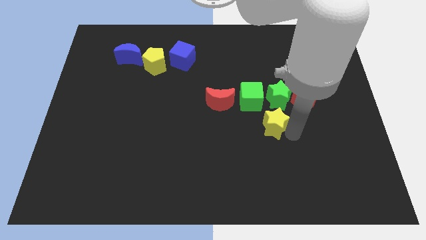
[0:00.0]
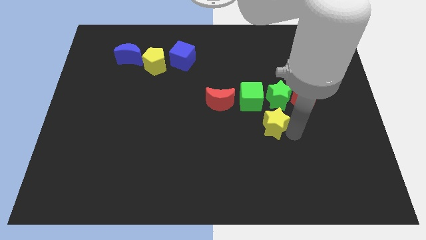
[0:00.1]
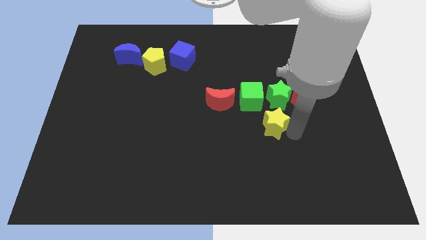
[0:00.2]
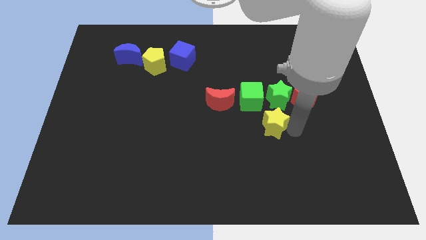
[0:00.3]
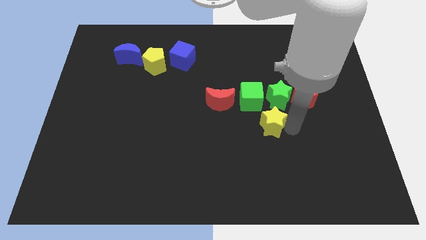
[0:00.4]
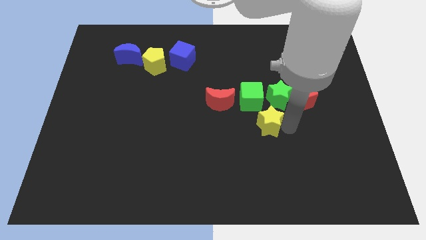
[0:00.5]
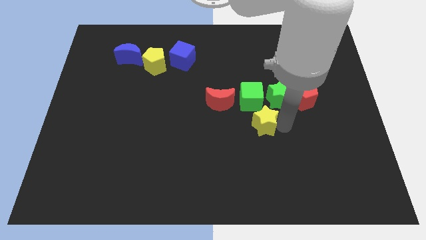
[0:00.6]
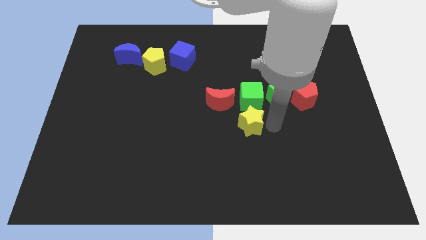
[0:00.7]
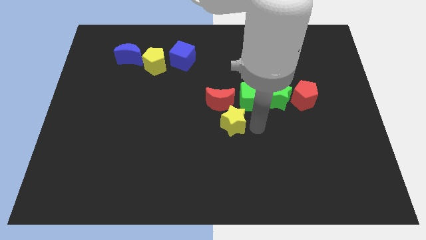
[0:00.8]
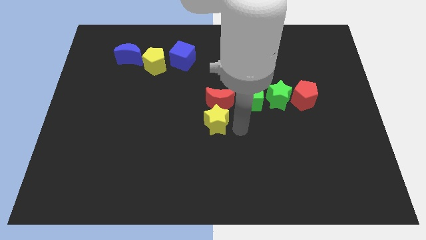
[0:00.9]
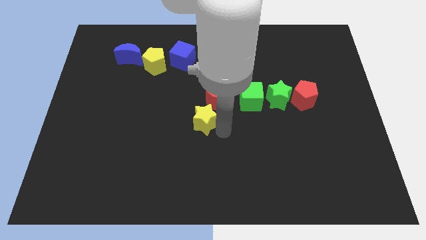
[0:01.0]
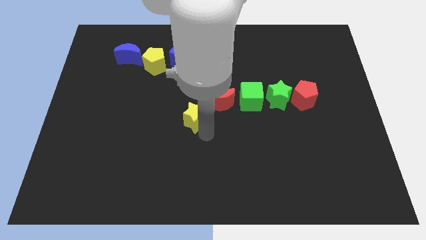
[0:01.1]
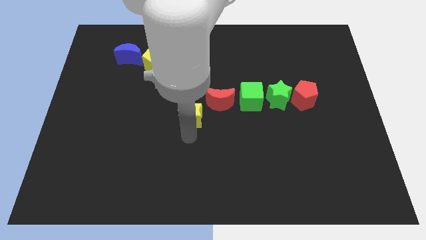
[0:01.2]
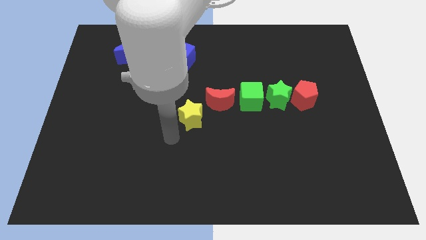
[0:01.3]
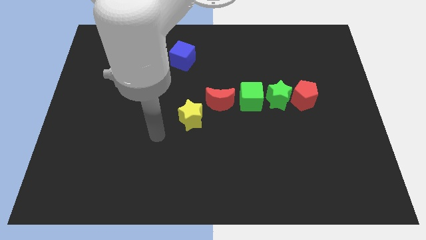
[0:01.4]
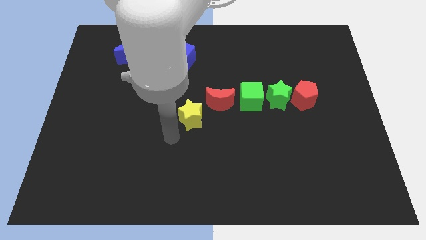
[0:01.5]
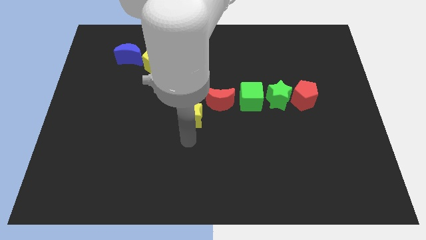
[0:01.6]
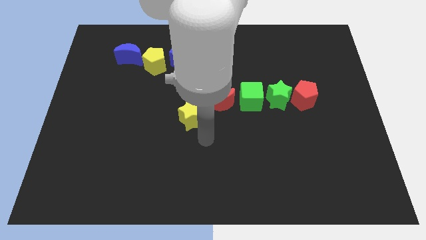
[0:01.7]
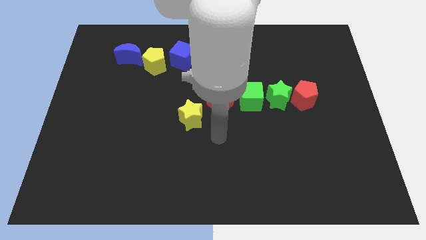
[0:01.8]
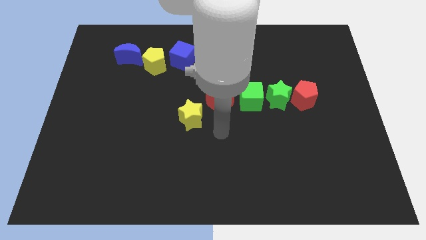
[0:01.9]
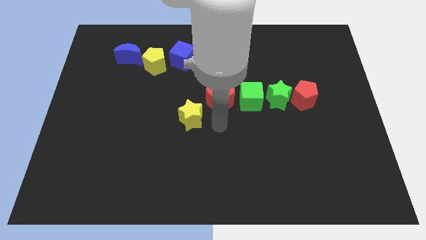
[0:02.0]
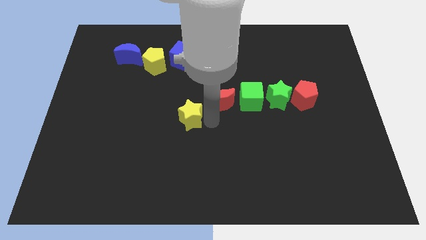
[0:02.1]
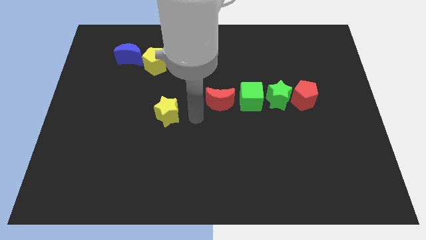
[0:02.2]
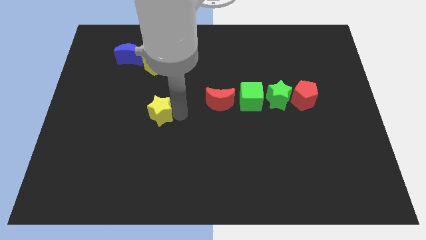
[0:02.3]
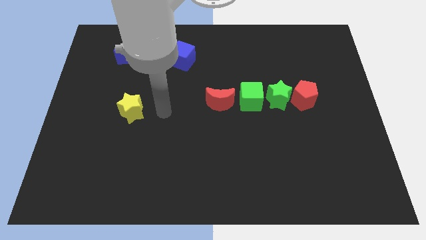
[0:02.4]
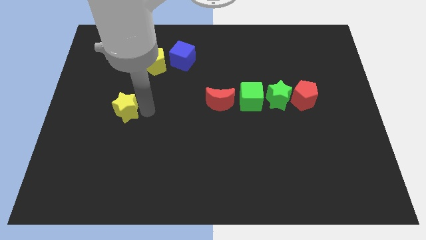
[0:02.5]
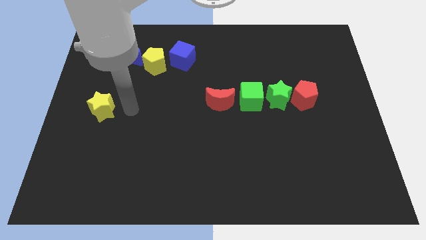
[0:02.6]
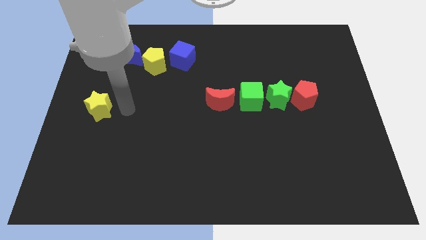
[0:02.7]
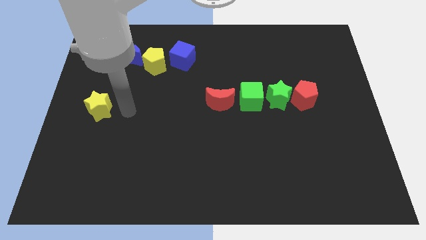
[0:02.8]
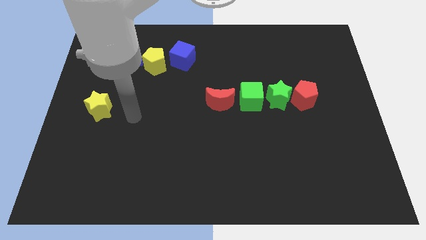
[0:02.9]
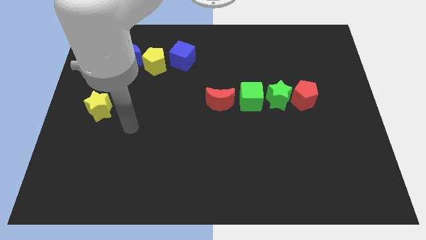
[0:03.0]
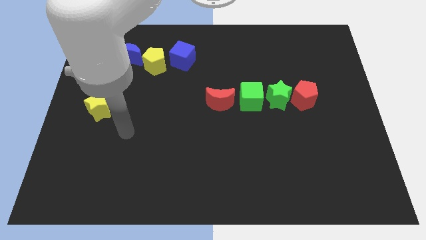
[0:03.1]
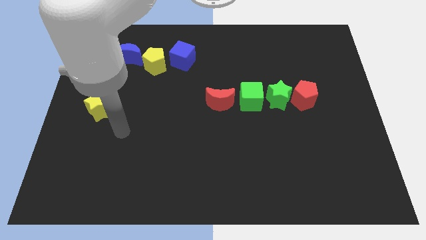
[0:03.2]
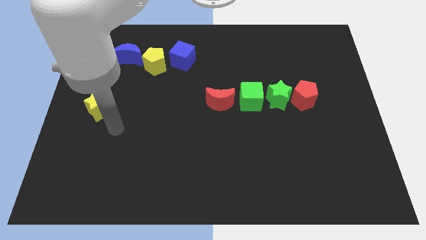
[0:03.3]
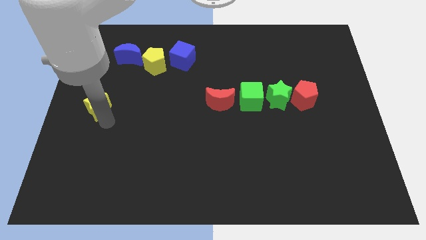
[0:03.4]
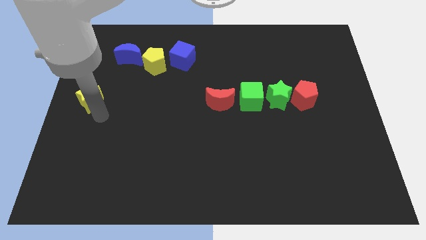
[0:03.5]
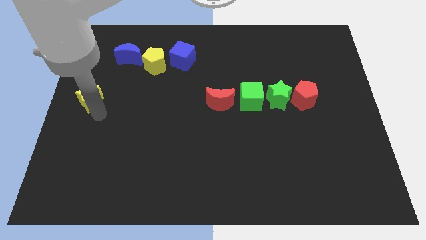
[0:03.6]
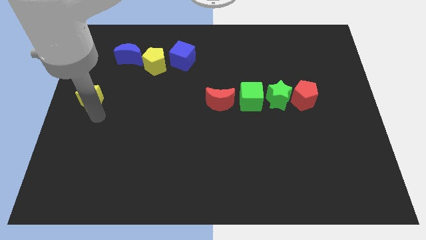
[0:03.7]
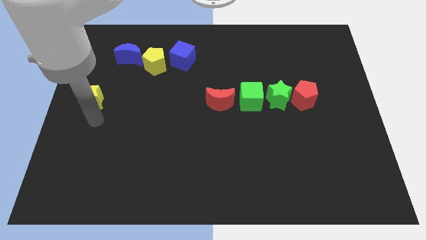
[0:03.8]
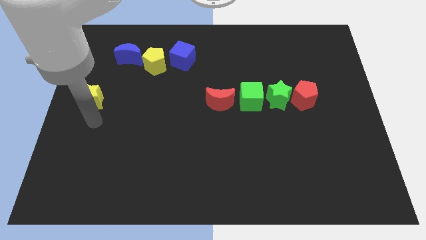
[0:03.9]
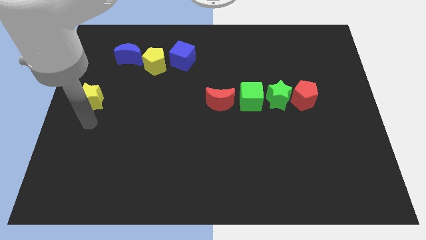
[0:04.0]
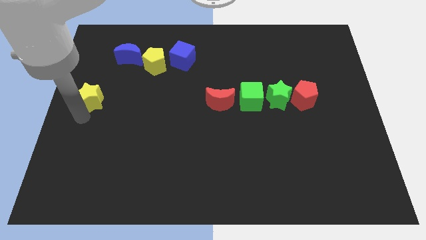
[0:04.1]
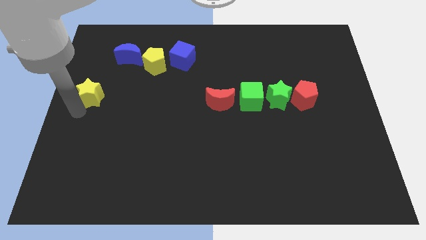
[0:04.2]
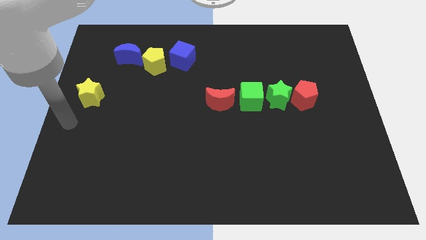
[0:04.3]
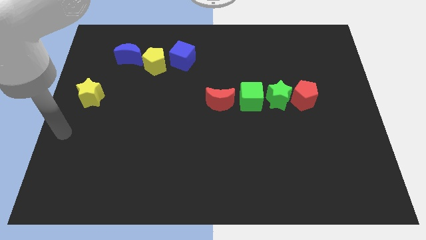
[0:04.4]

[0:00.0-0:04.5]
move yellow star to left of the board

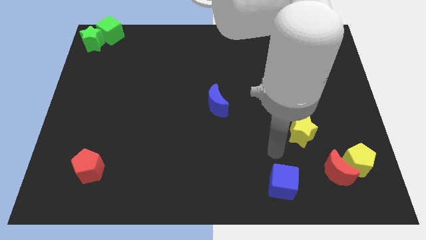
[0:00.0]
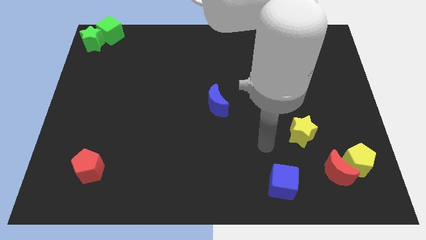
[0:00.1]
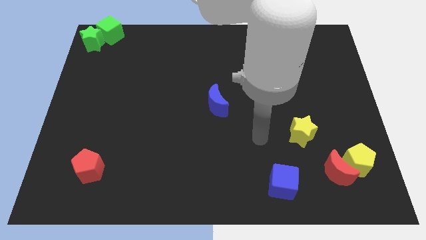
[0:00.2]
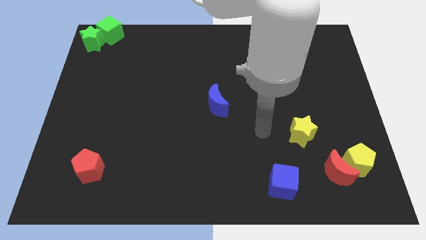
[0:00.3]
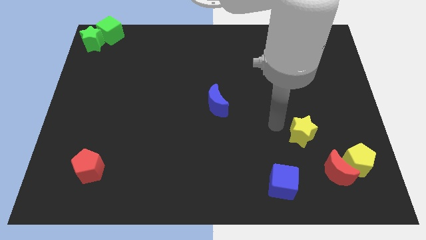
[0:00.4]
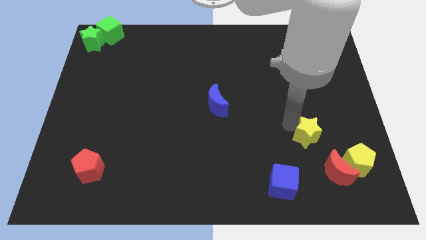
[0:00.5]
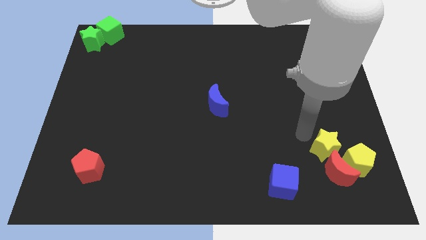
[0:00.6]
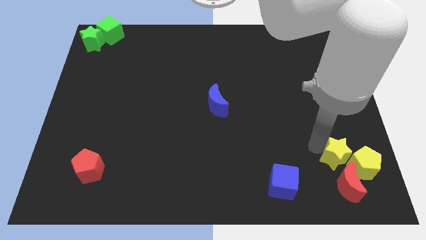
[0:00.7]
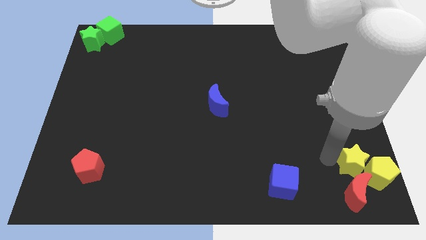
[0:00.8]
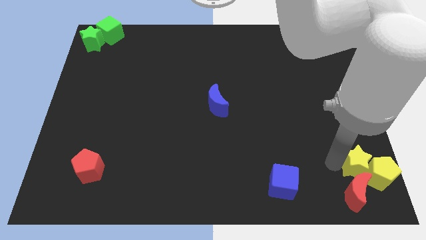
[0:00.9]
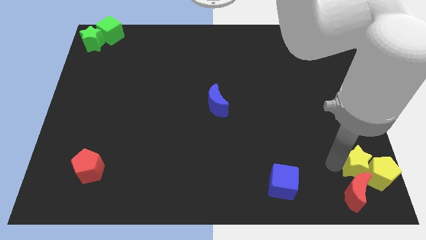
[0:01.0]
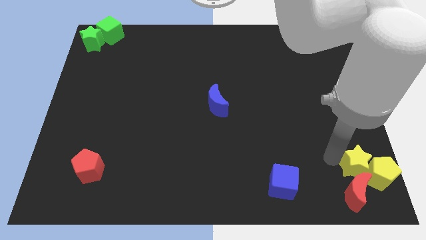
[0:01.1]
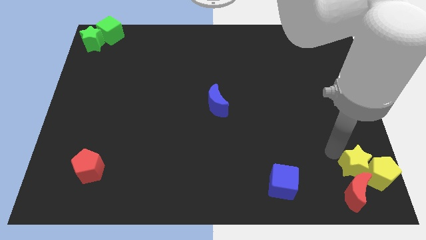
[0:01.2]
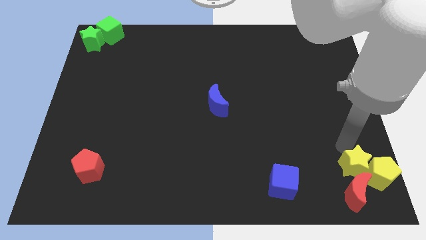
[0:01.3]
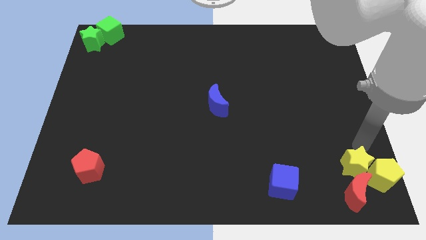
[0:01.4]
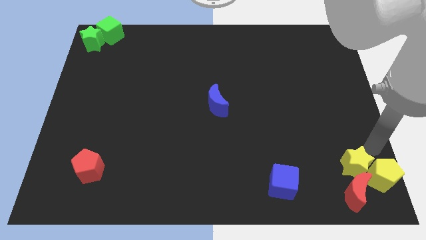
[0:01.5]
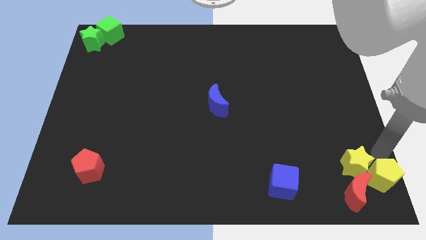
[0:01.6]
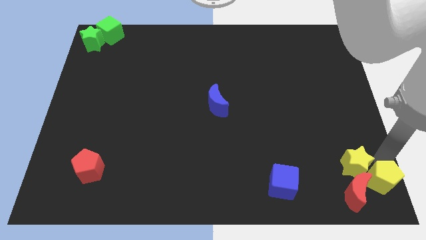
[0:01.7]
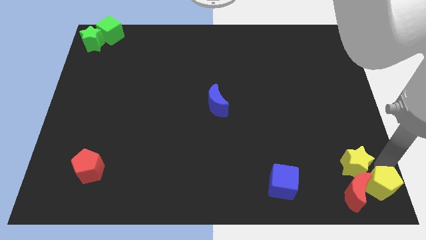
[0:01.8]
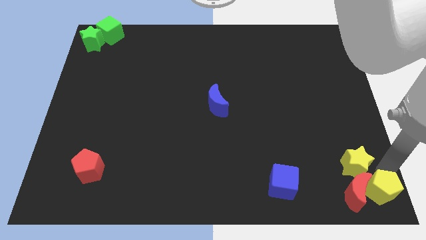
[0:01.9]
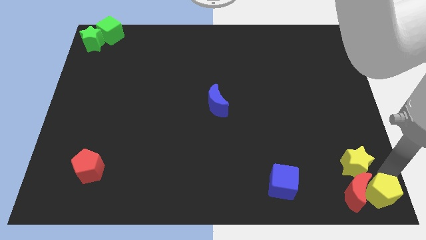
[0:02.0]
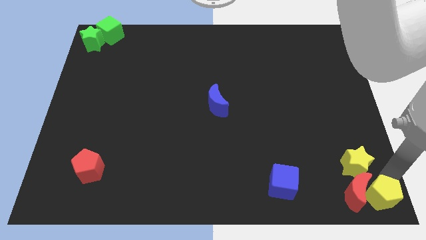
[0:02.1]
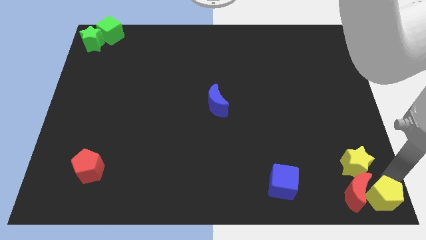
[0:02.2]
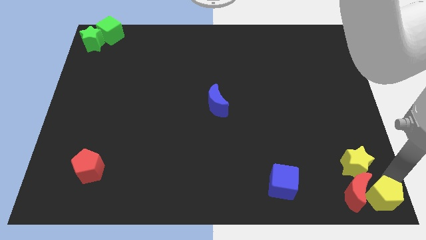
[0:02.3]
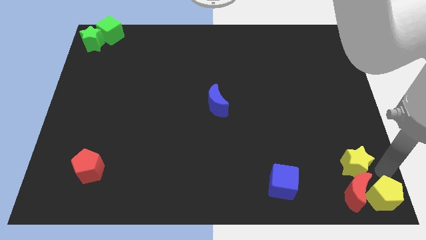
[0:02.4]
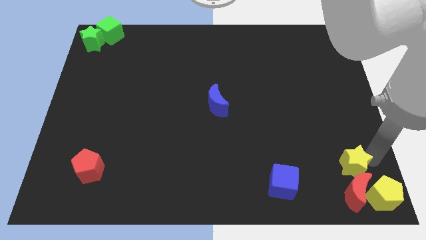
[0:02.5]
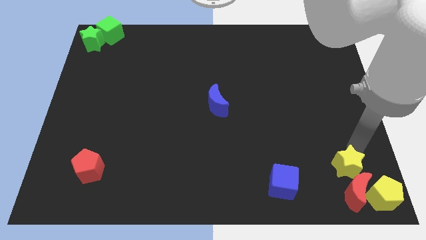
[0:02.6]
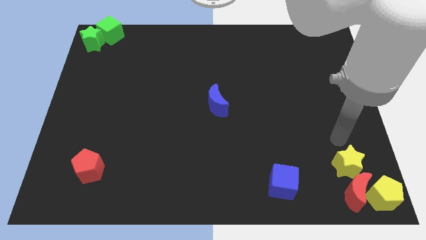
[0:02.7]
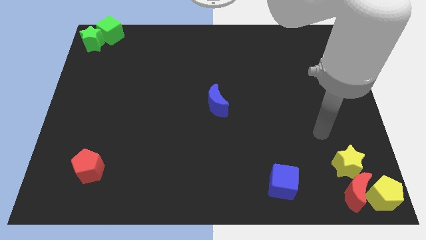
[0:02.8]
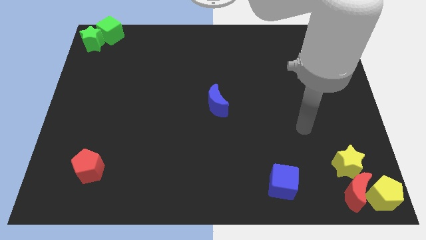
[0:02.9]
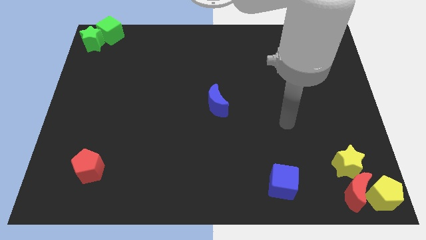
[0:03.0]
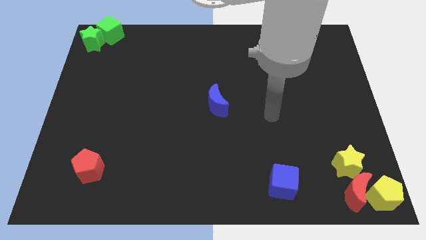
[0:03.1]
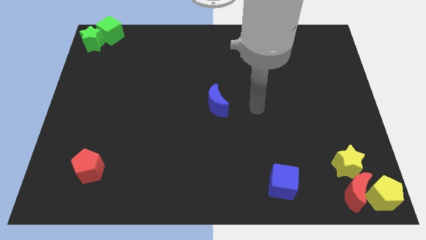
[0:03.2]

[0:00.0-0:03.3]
push the yellow blocks to the bottom right corner

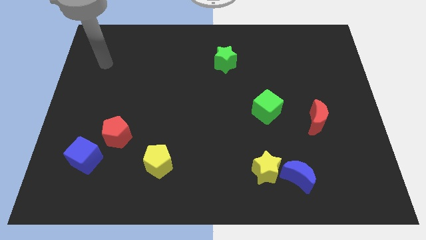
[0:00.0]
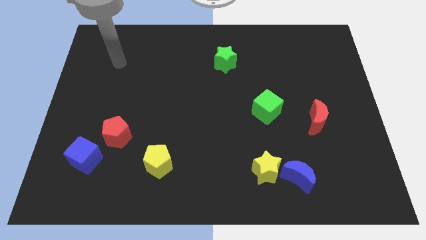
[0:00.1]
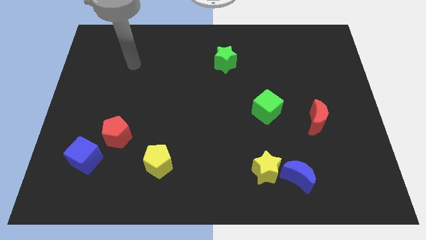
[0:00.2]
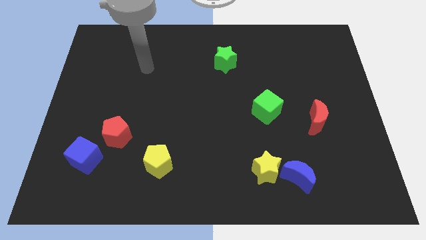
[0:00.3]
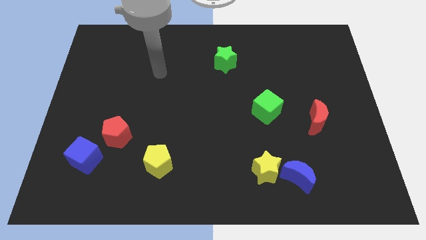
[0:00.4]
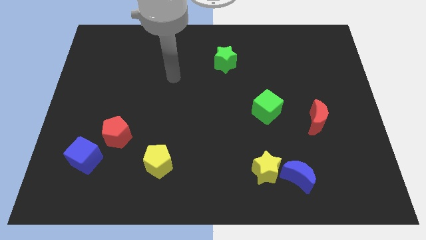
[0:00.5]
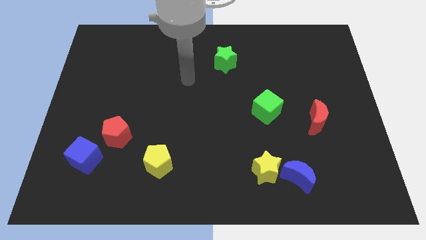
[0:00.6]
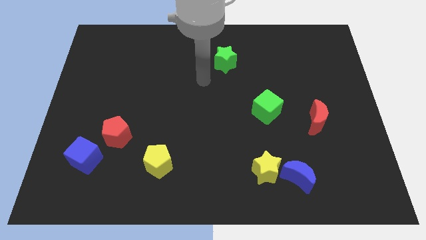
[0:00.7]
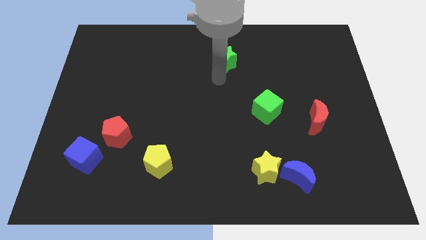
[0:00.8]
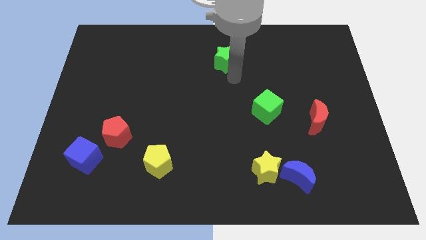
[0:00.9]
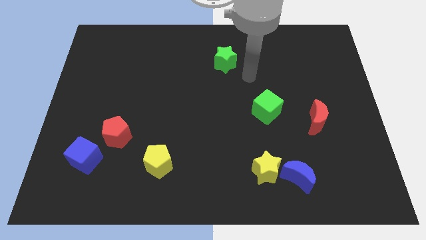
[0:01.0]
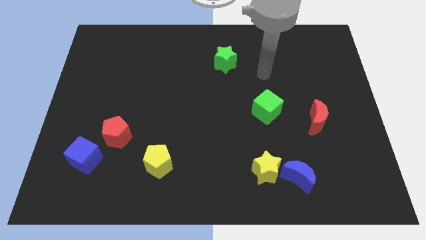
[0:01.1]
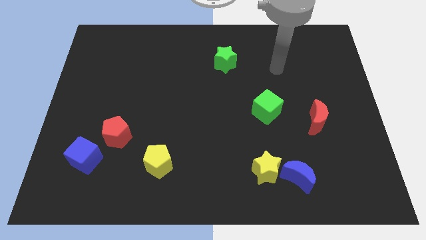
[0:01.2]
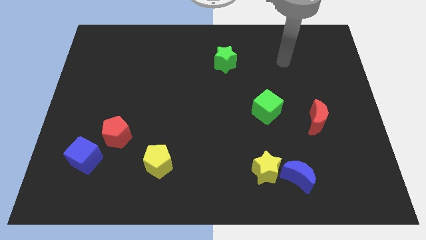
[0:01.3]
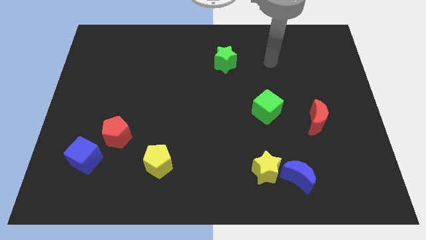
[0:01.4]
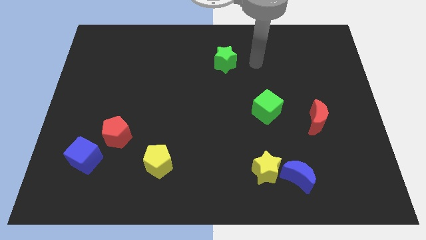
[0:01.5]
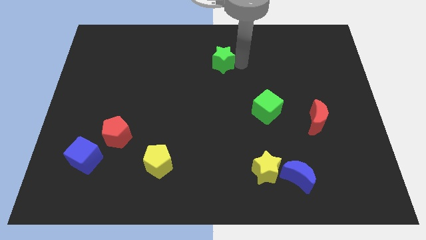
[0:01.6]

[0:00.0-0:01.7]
point your arm close to green star
